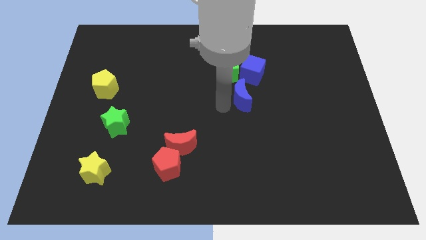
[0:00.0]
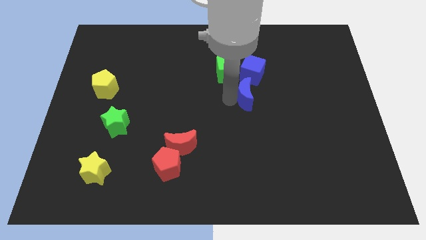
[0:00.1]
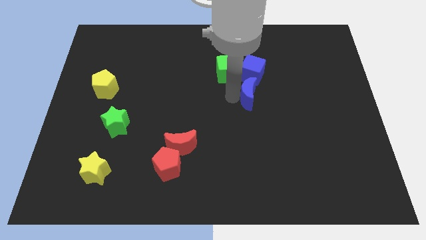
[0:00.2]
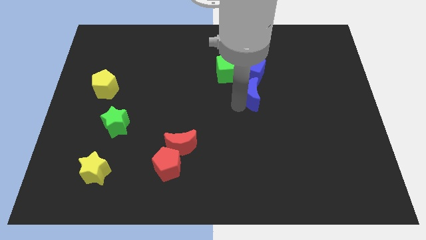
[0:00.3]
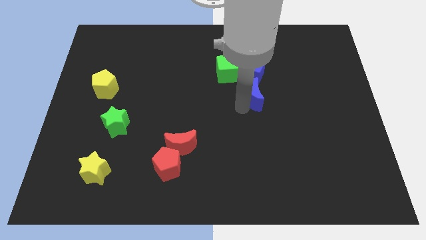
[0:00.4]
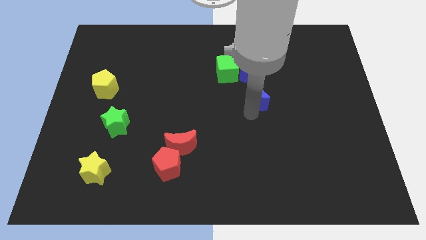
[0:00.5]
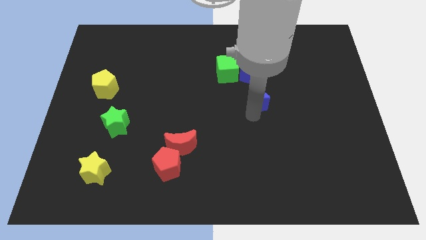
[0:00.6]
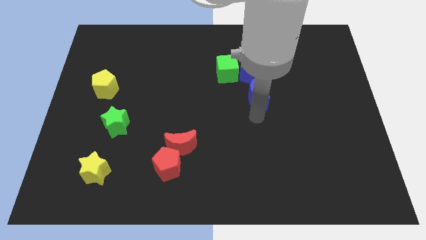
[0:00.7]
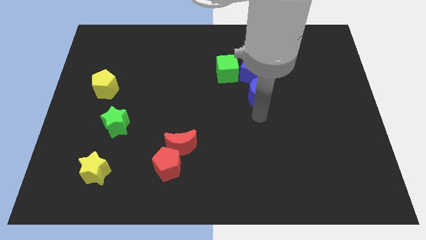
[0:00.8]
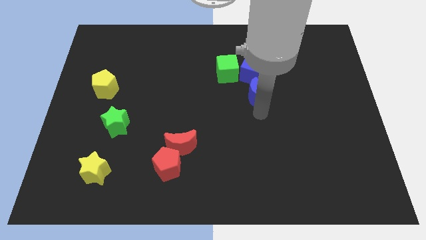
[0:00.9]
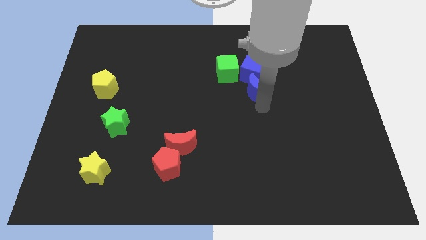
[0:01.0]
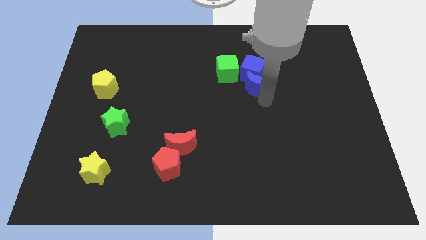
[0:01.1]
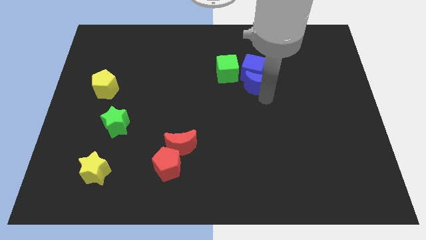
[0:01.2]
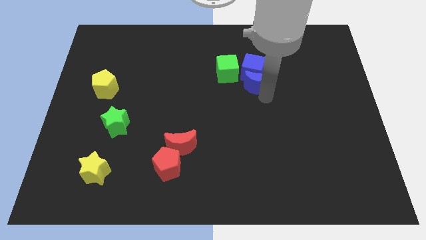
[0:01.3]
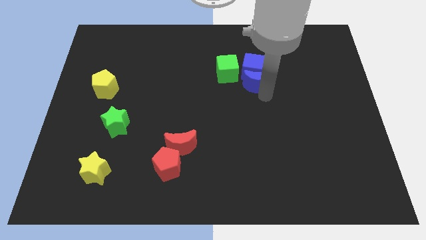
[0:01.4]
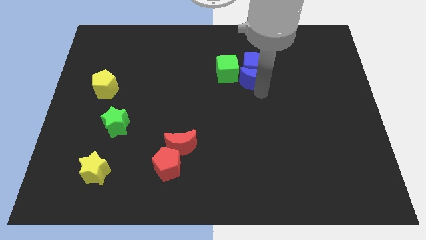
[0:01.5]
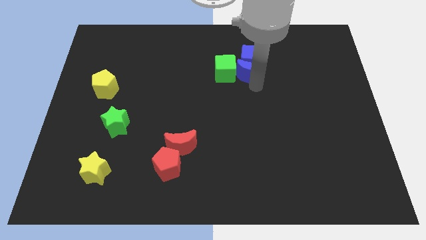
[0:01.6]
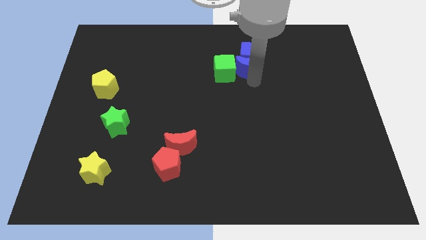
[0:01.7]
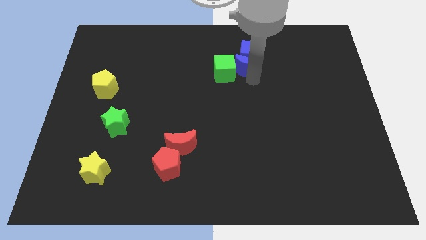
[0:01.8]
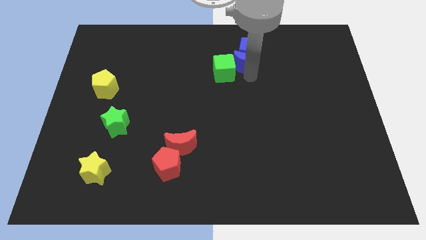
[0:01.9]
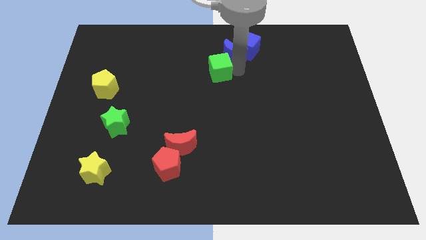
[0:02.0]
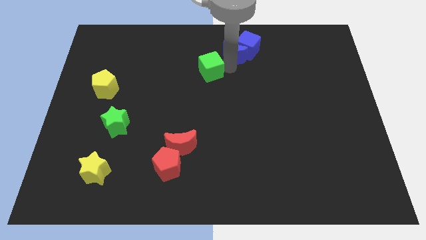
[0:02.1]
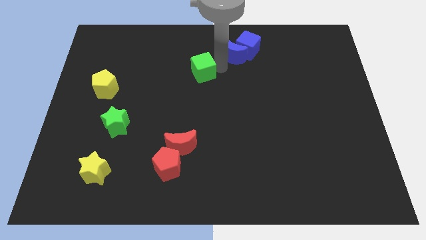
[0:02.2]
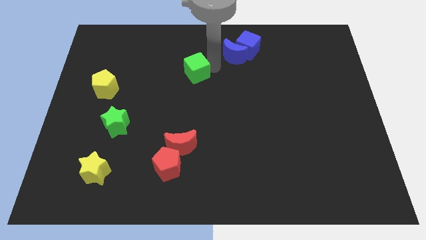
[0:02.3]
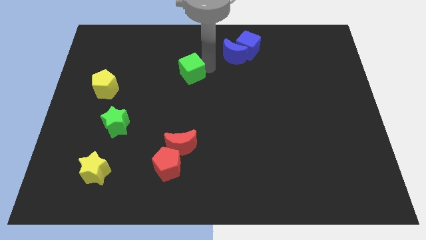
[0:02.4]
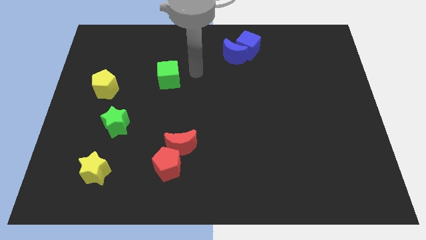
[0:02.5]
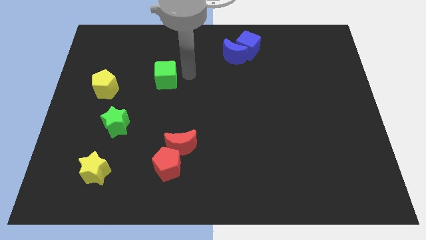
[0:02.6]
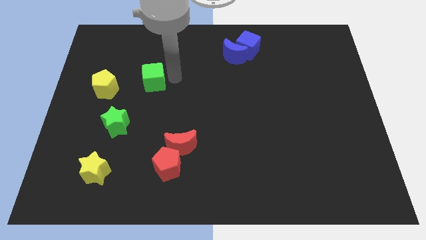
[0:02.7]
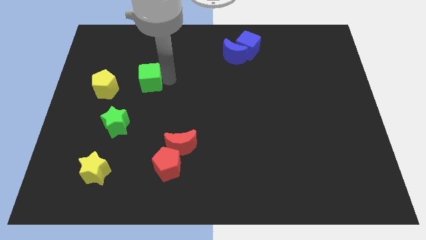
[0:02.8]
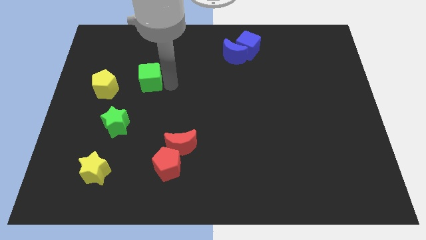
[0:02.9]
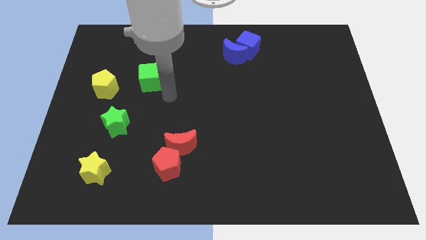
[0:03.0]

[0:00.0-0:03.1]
place the green cube right to the yellow pentagon

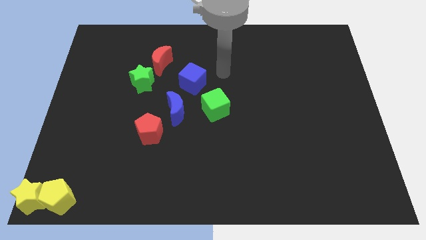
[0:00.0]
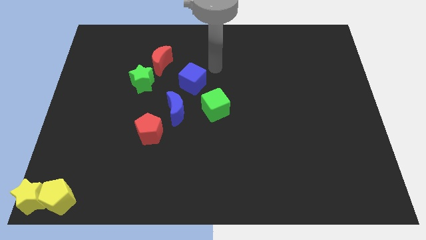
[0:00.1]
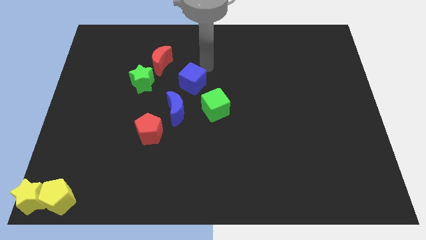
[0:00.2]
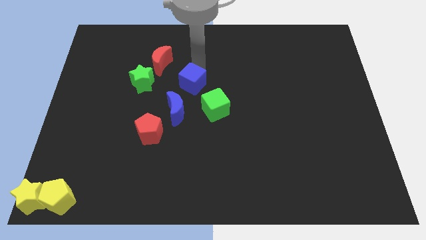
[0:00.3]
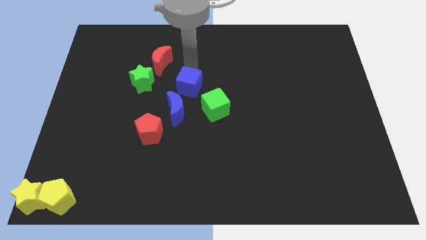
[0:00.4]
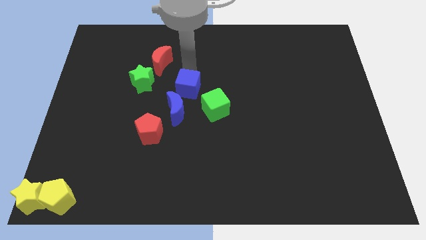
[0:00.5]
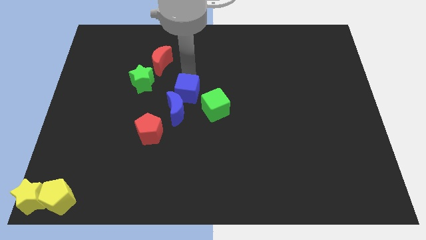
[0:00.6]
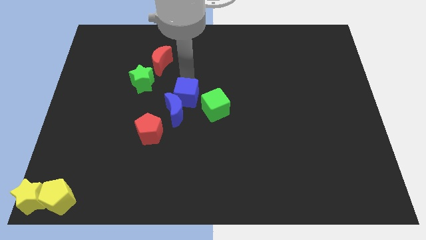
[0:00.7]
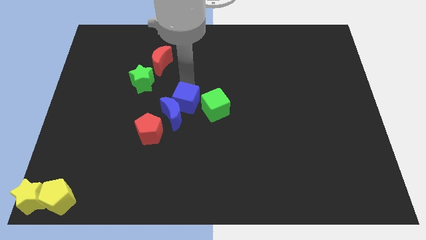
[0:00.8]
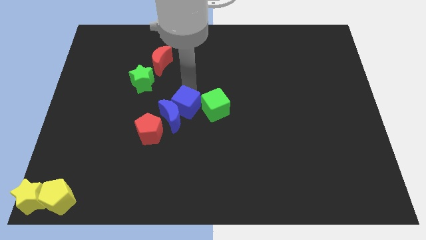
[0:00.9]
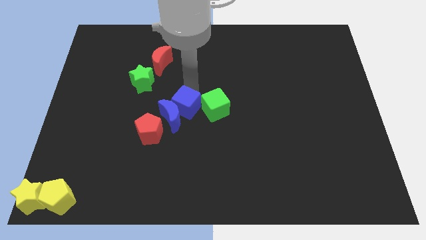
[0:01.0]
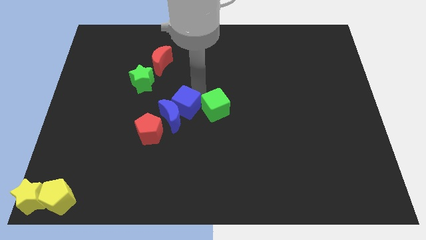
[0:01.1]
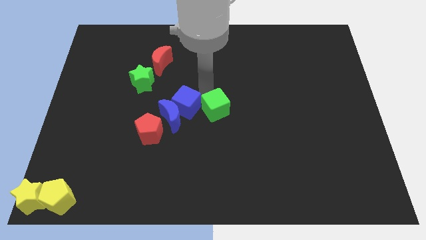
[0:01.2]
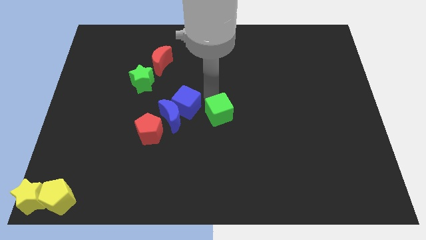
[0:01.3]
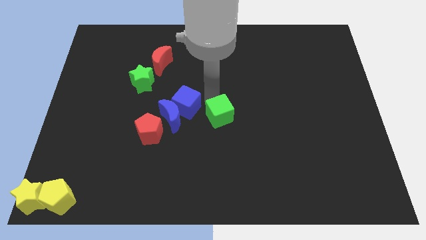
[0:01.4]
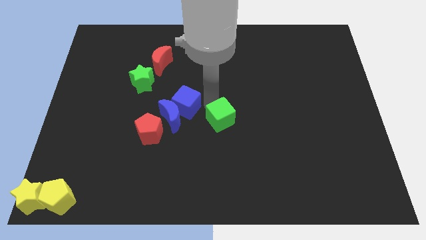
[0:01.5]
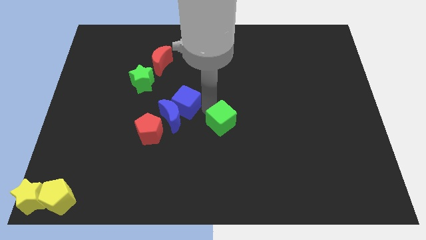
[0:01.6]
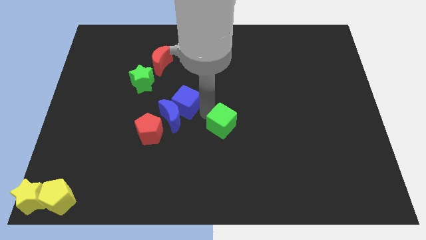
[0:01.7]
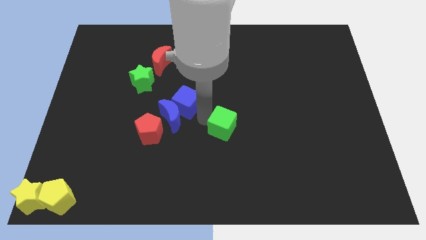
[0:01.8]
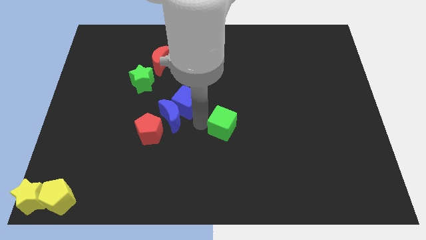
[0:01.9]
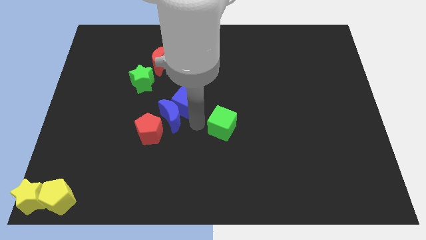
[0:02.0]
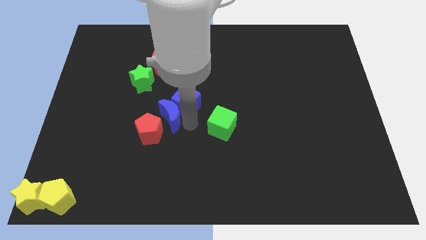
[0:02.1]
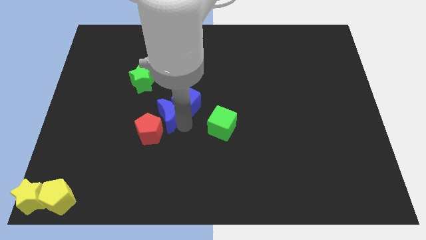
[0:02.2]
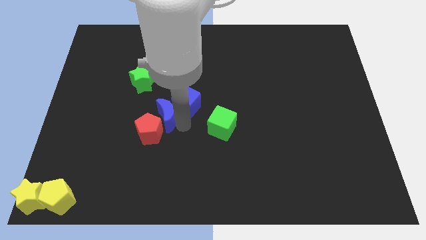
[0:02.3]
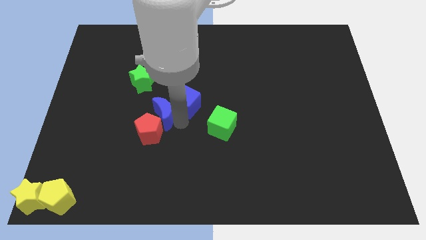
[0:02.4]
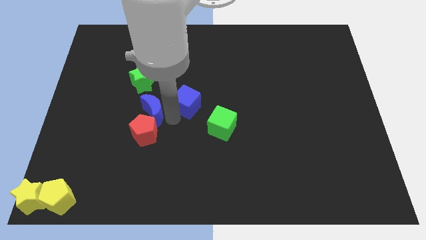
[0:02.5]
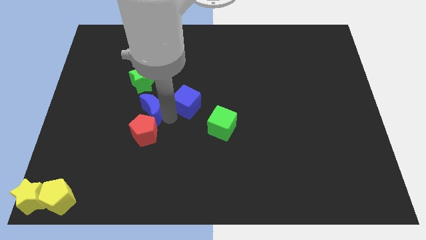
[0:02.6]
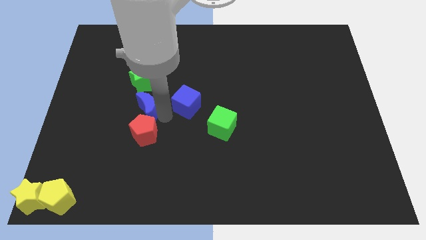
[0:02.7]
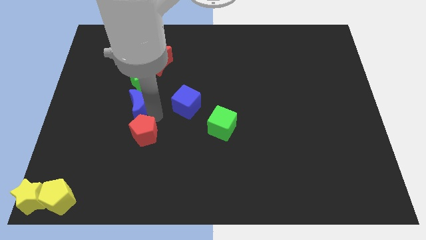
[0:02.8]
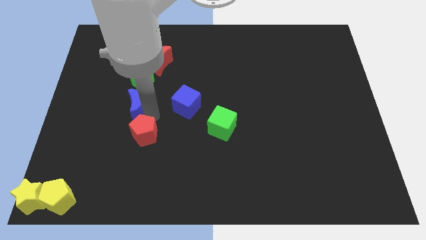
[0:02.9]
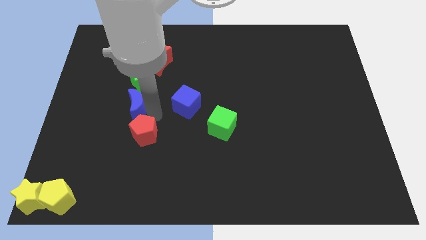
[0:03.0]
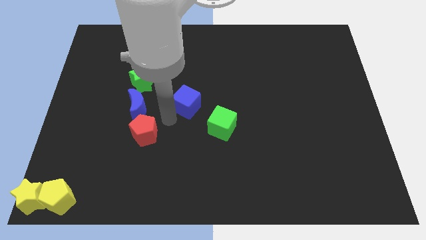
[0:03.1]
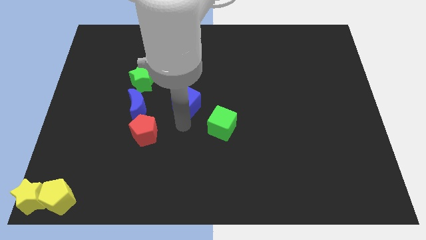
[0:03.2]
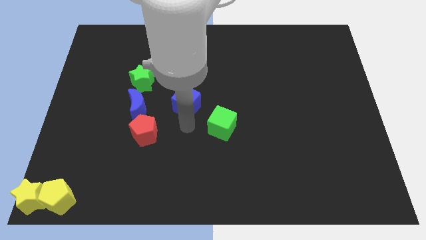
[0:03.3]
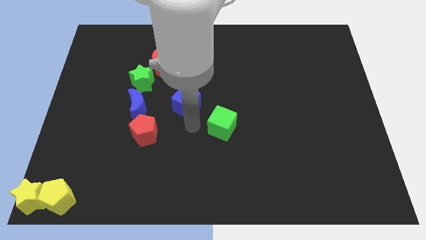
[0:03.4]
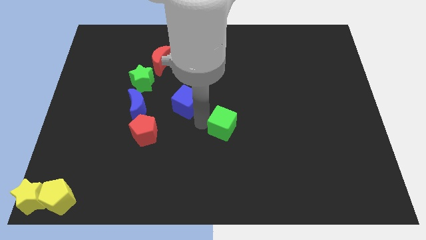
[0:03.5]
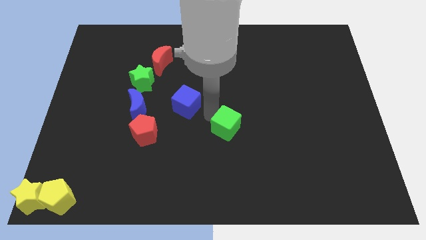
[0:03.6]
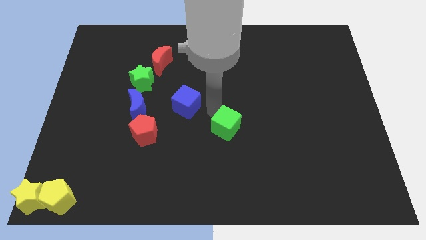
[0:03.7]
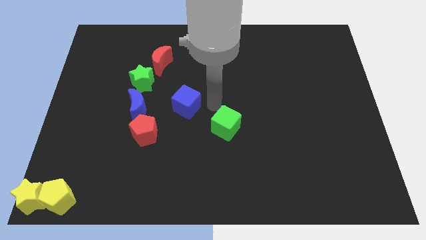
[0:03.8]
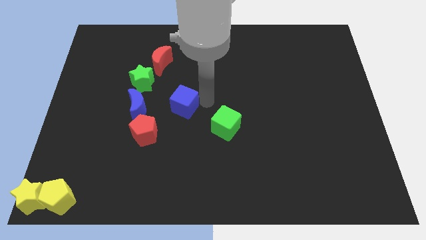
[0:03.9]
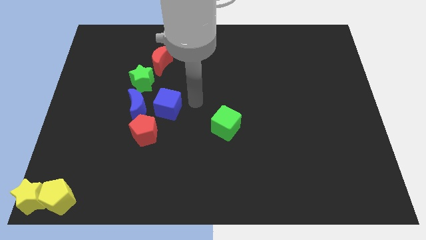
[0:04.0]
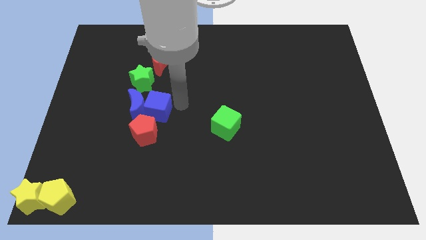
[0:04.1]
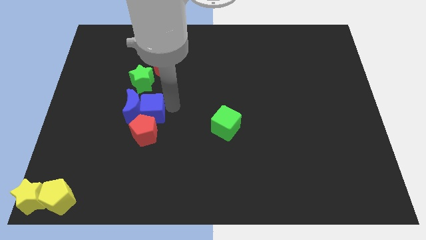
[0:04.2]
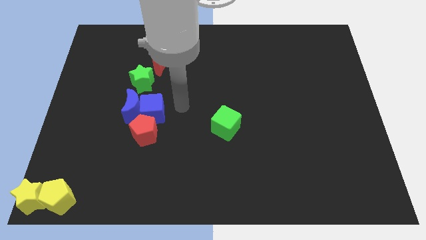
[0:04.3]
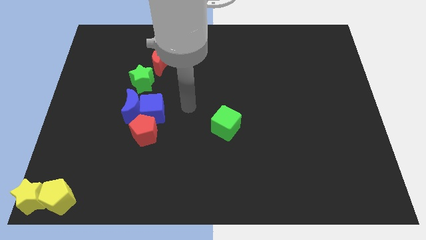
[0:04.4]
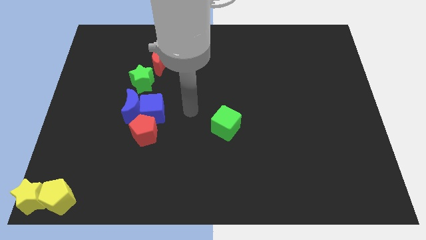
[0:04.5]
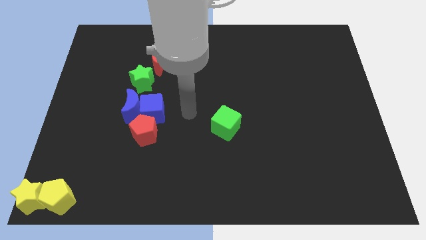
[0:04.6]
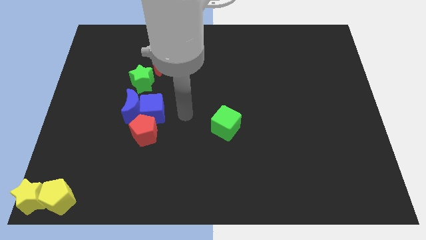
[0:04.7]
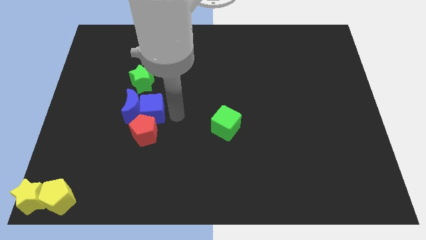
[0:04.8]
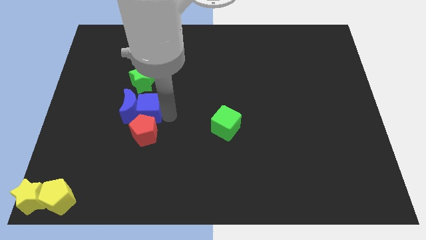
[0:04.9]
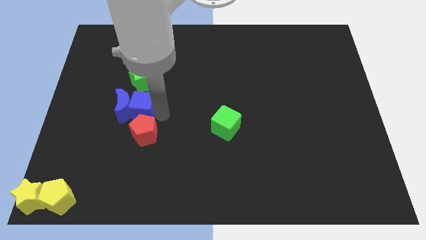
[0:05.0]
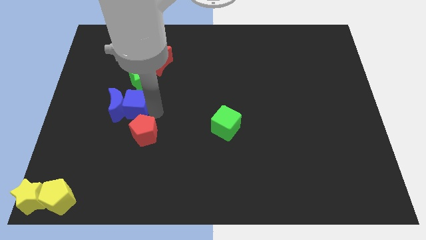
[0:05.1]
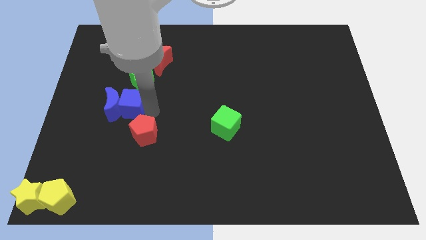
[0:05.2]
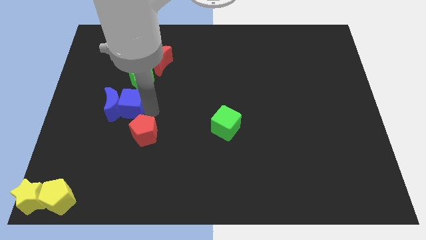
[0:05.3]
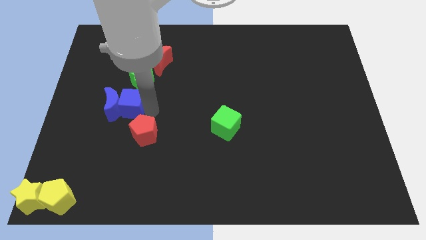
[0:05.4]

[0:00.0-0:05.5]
push the two blue blocks towards the center left

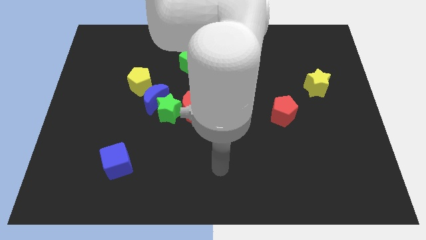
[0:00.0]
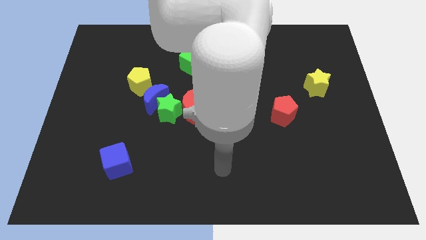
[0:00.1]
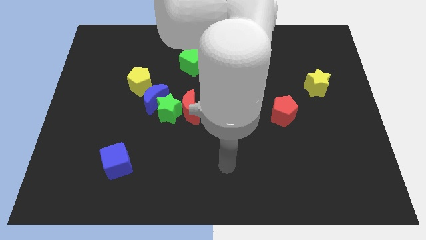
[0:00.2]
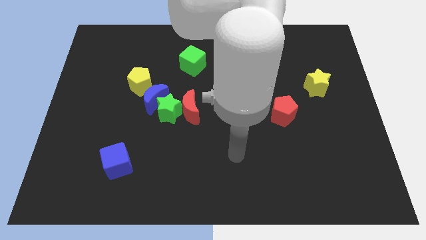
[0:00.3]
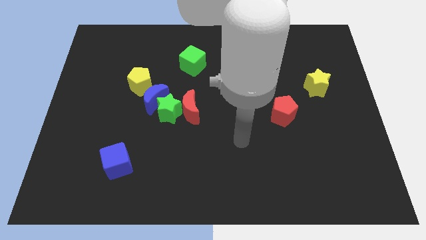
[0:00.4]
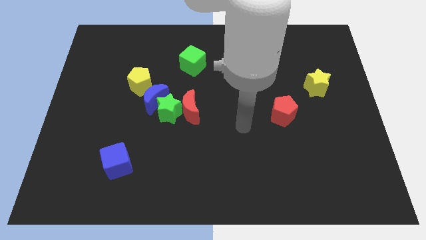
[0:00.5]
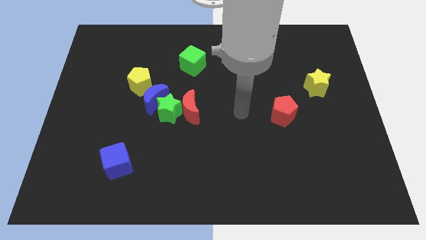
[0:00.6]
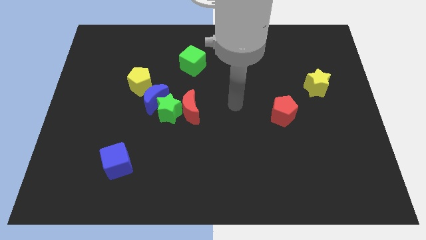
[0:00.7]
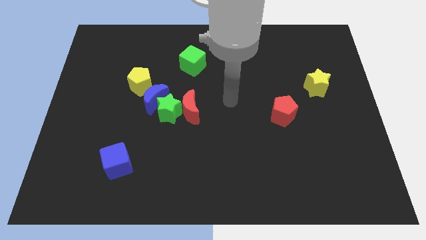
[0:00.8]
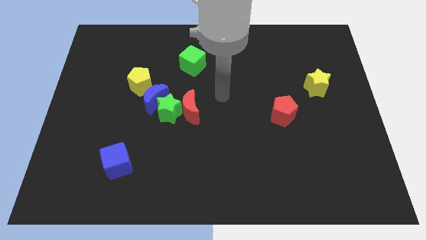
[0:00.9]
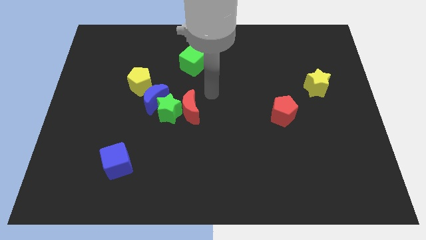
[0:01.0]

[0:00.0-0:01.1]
move your arm to the center of the board
